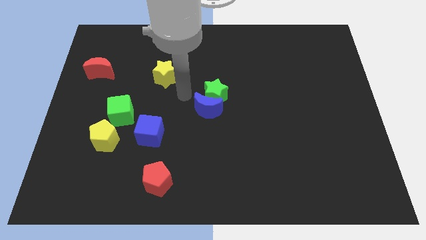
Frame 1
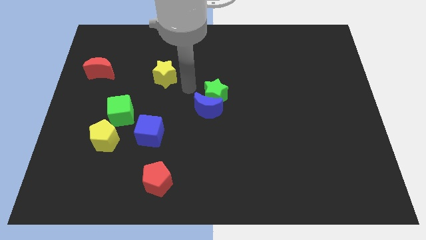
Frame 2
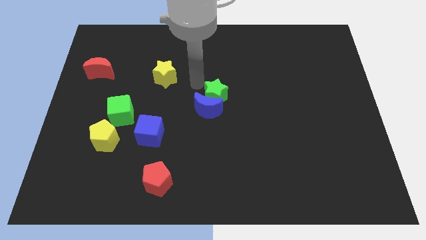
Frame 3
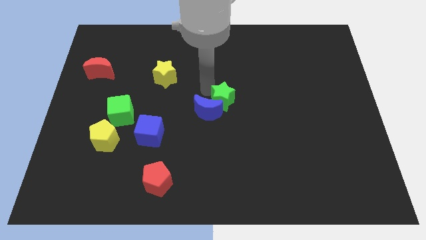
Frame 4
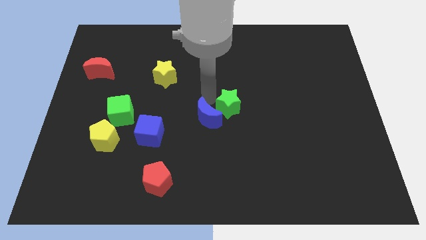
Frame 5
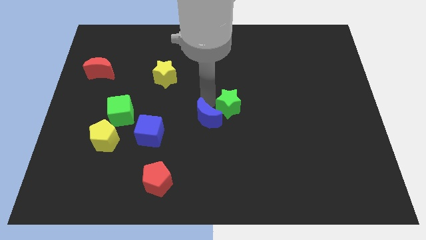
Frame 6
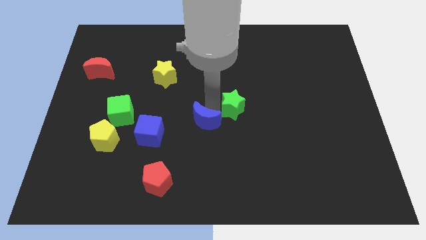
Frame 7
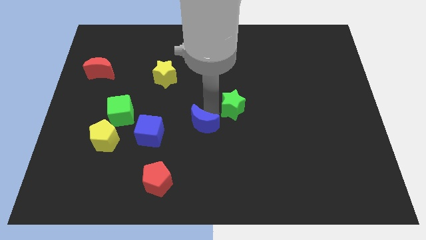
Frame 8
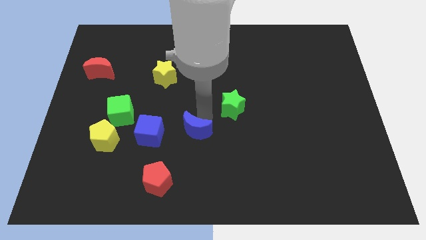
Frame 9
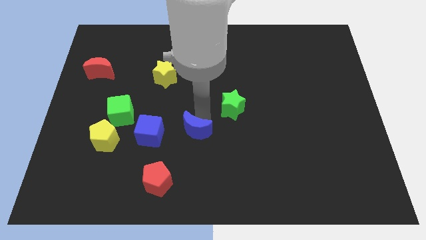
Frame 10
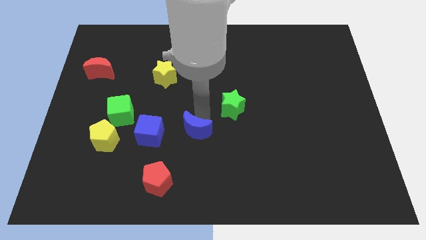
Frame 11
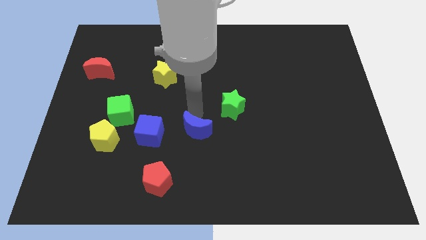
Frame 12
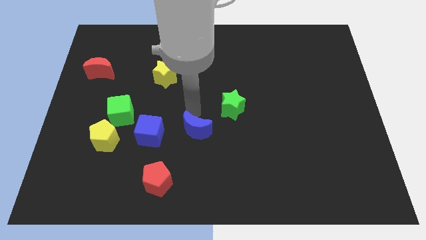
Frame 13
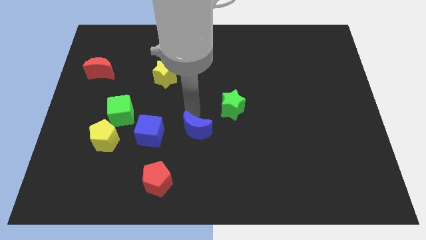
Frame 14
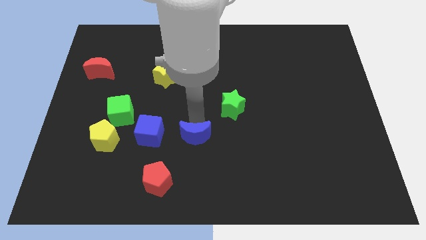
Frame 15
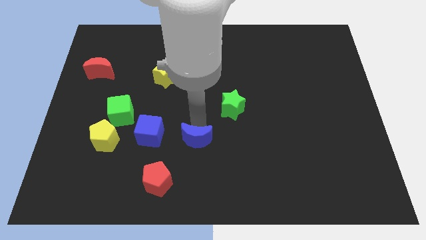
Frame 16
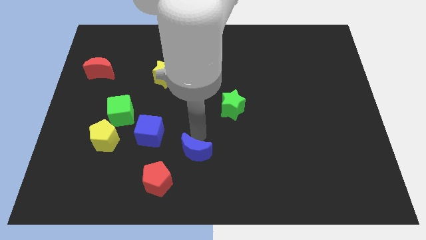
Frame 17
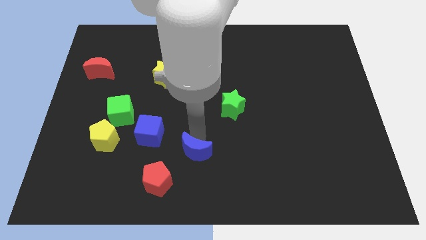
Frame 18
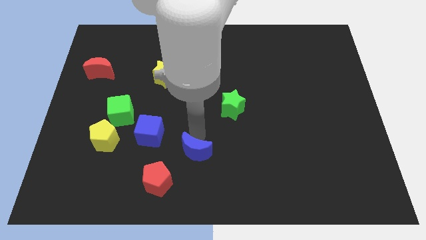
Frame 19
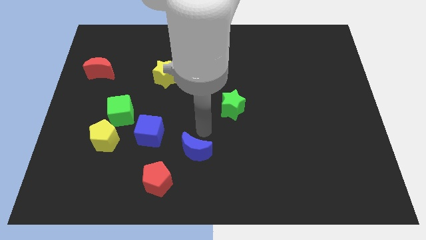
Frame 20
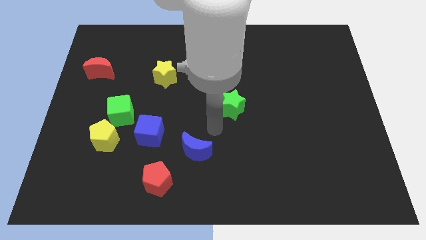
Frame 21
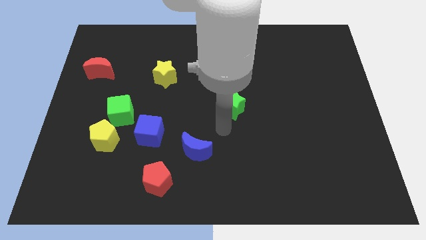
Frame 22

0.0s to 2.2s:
separate green star and blue moon

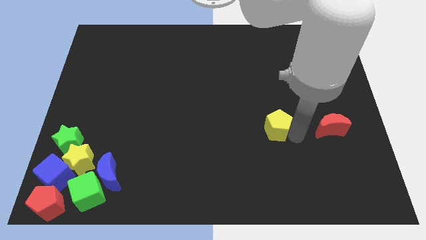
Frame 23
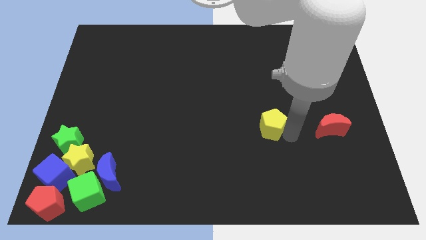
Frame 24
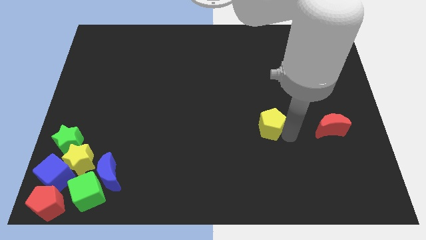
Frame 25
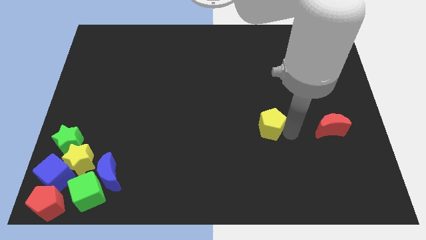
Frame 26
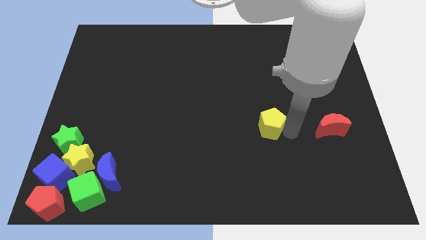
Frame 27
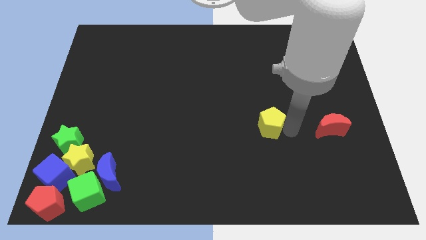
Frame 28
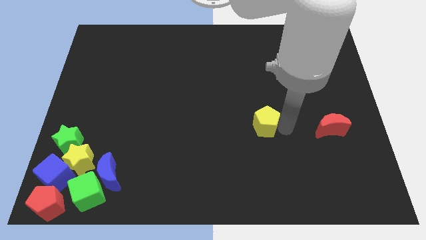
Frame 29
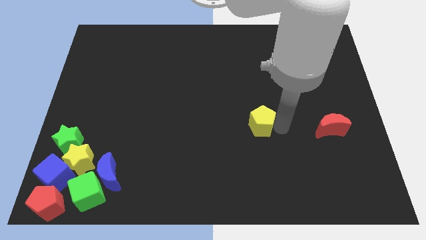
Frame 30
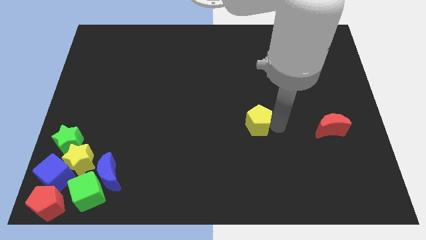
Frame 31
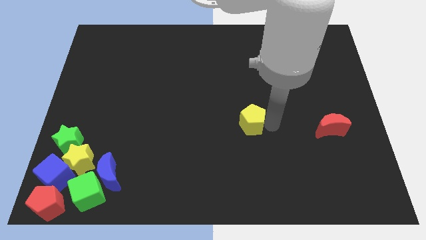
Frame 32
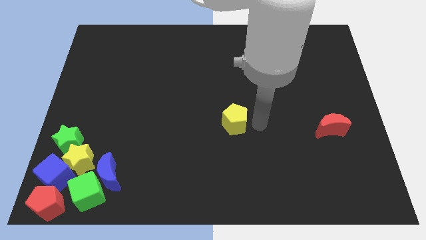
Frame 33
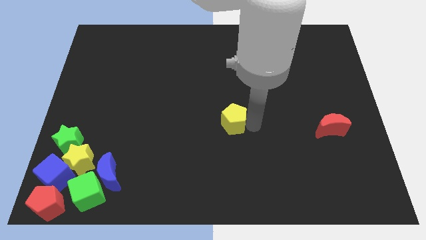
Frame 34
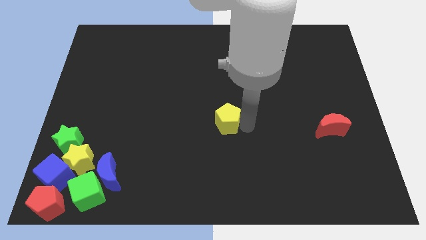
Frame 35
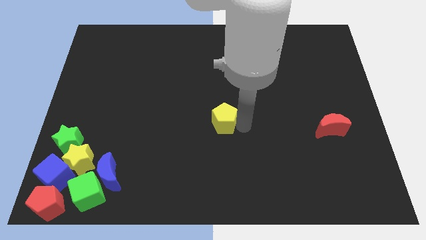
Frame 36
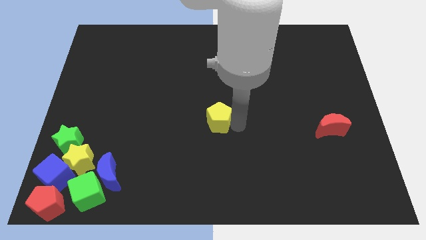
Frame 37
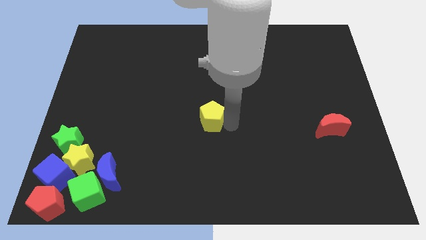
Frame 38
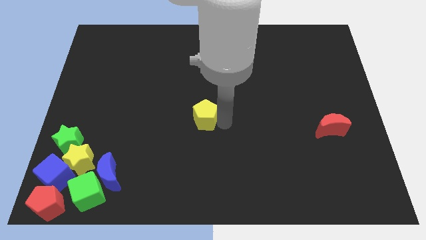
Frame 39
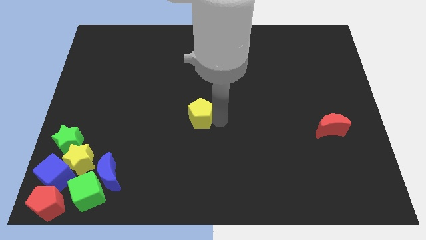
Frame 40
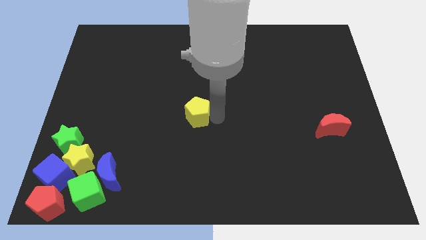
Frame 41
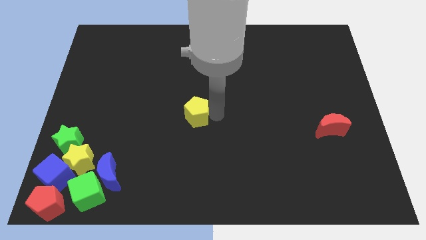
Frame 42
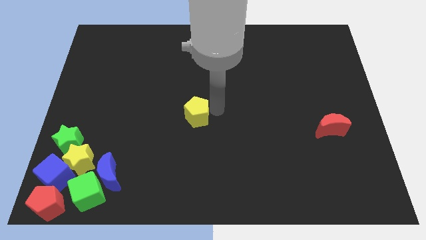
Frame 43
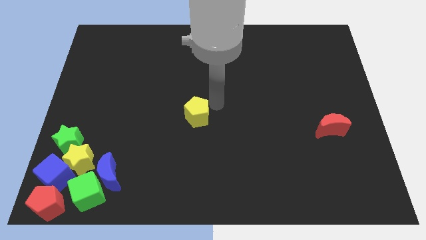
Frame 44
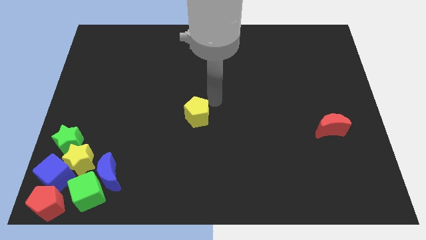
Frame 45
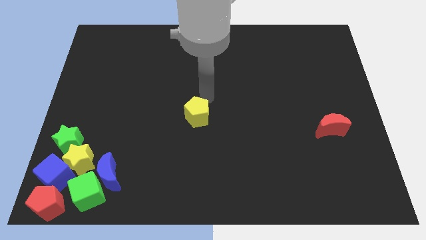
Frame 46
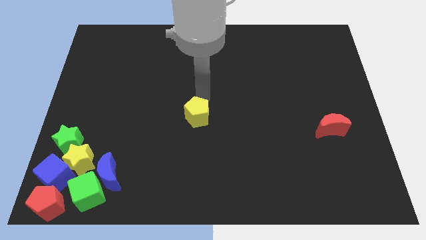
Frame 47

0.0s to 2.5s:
move the yellow pentagon to the left

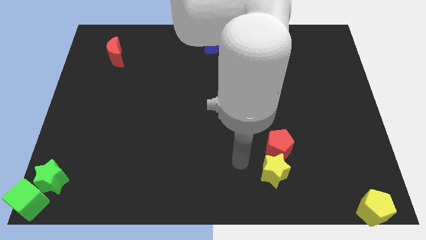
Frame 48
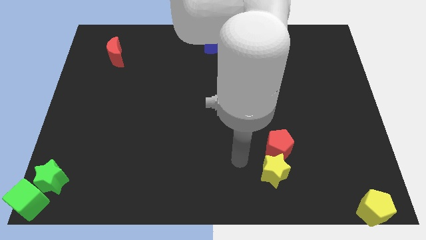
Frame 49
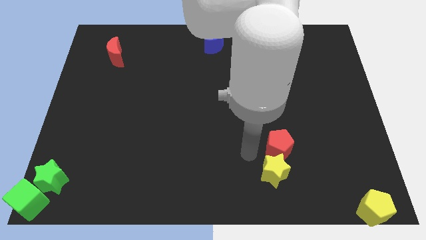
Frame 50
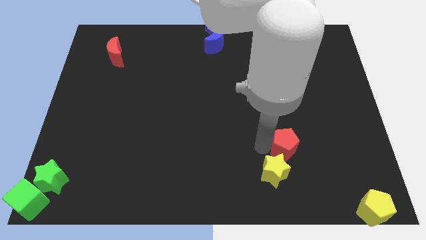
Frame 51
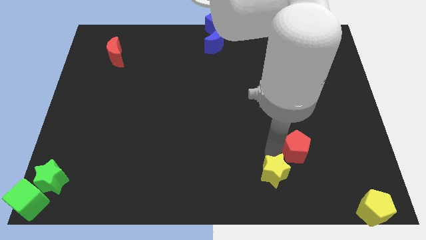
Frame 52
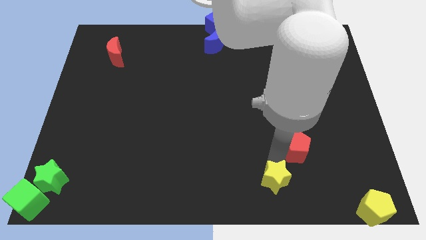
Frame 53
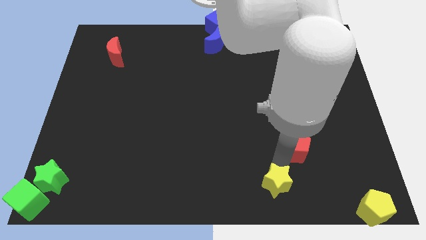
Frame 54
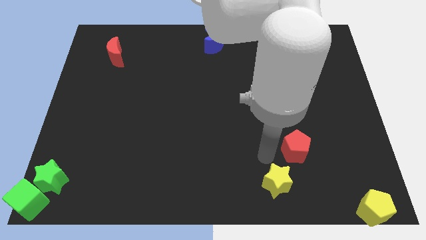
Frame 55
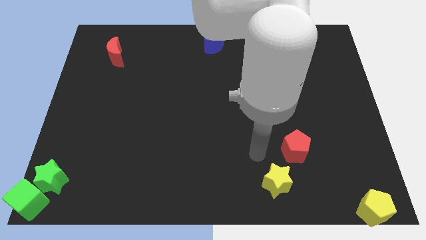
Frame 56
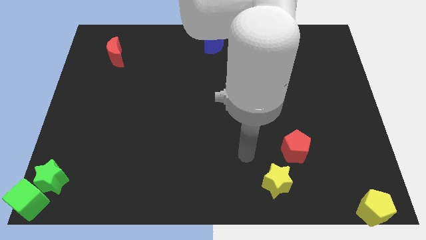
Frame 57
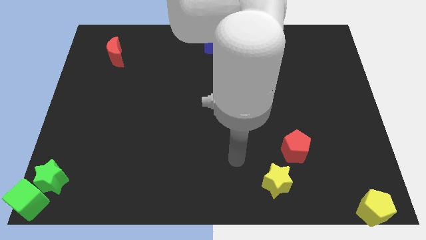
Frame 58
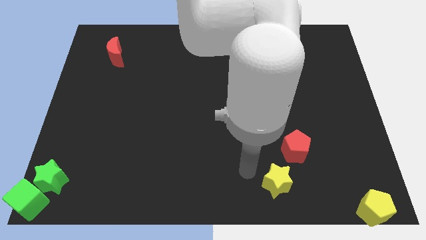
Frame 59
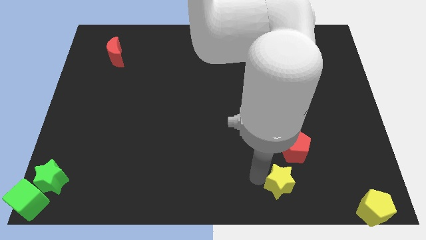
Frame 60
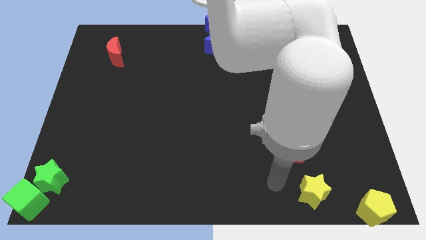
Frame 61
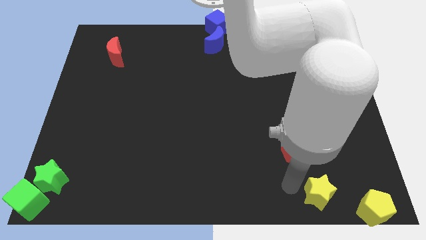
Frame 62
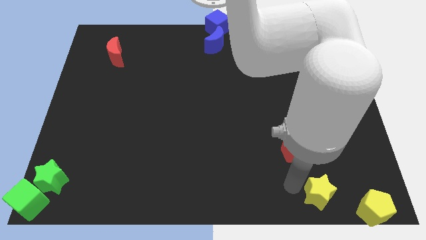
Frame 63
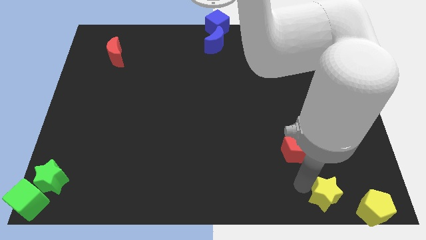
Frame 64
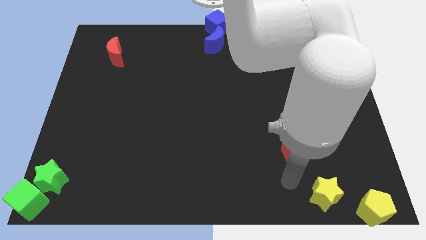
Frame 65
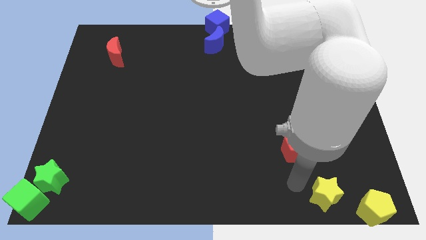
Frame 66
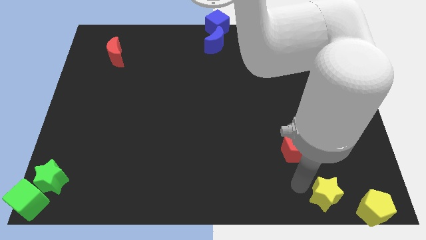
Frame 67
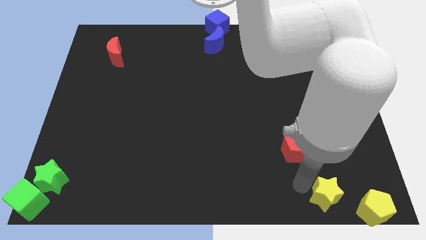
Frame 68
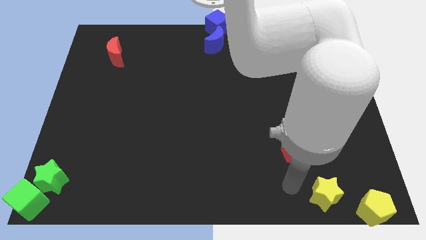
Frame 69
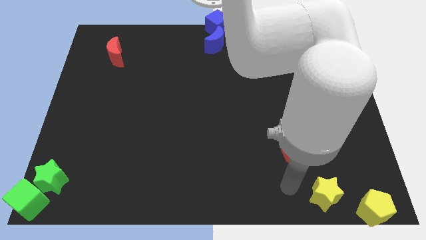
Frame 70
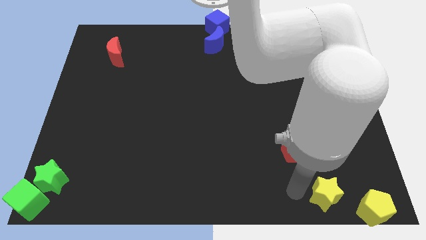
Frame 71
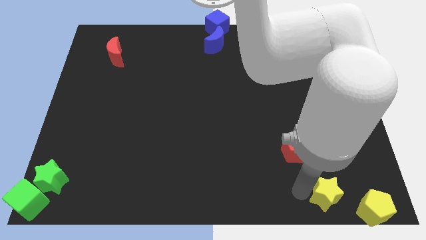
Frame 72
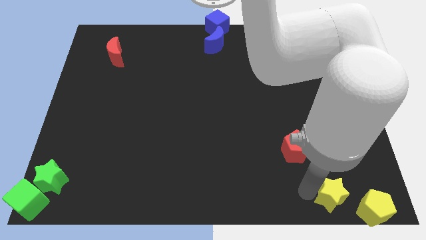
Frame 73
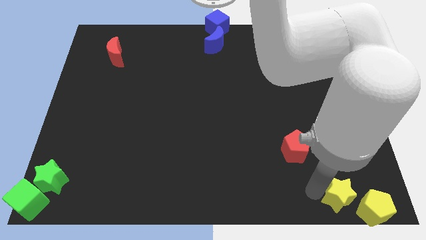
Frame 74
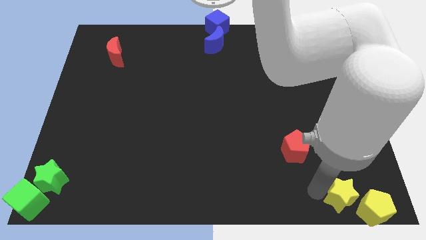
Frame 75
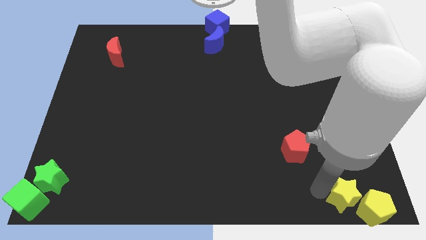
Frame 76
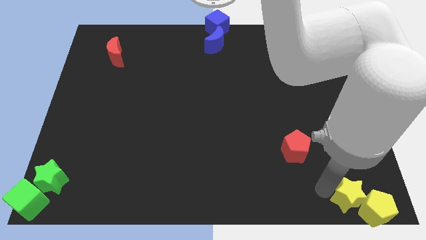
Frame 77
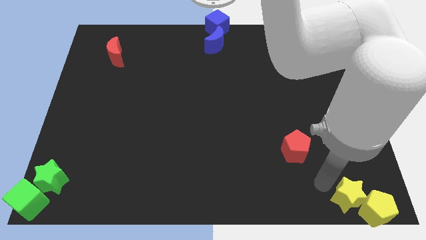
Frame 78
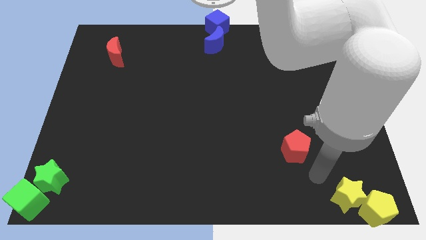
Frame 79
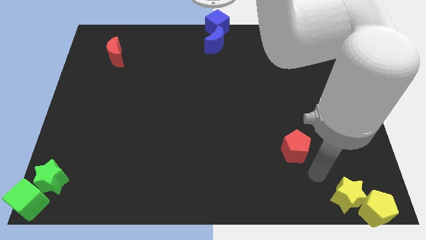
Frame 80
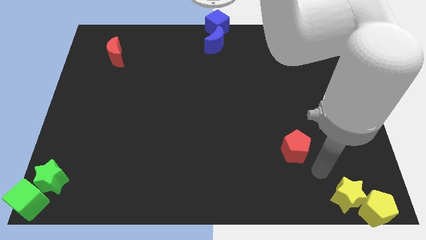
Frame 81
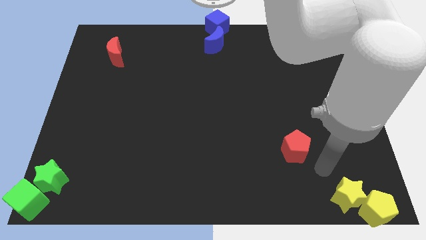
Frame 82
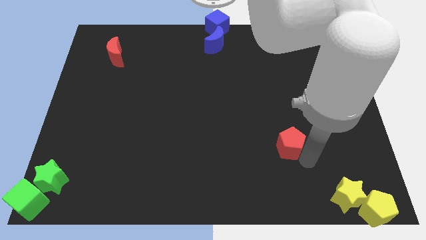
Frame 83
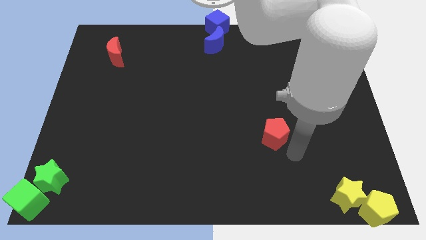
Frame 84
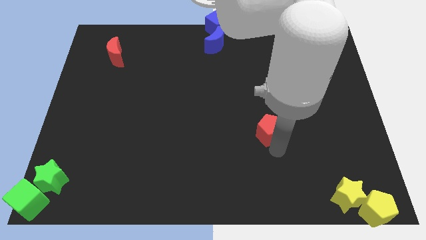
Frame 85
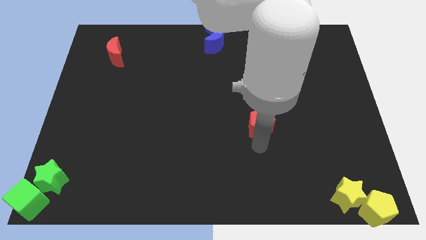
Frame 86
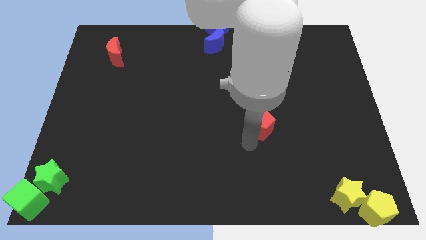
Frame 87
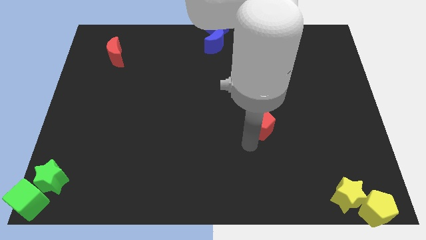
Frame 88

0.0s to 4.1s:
push the yellow star into the yellow pentagon

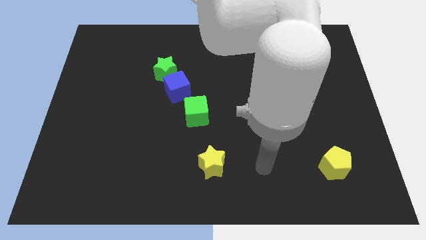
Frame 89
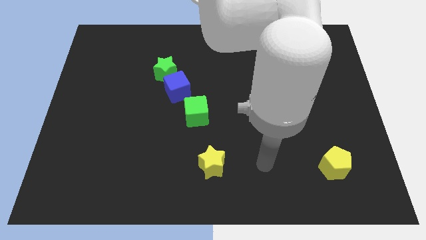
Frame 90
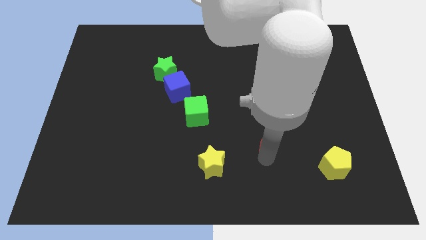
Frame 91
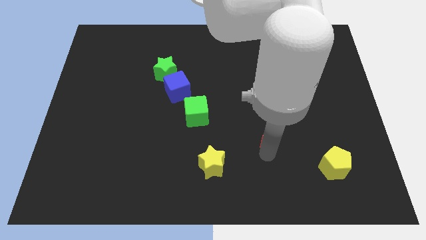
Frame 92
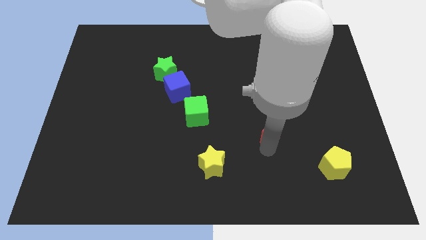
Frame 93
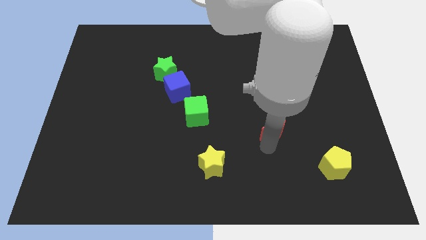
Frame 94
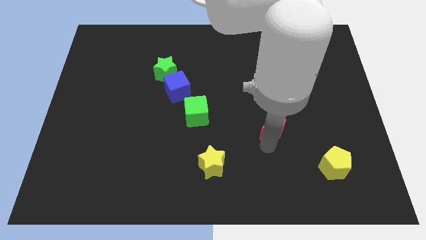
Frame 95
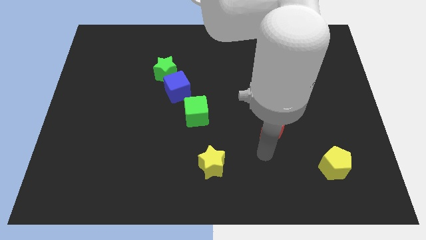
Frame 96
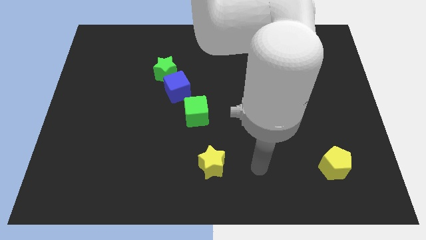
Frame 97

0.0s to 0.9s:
push red crescent slightly upwards
